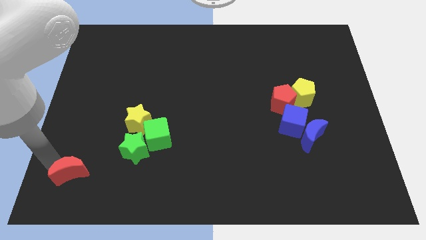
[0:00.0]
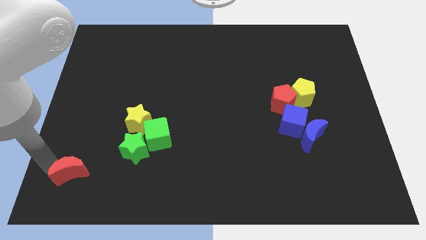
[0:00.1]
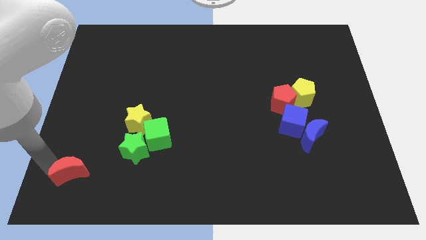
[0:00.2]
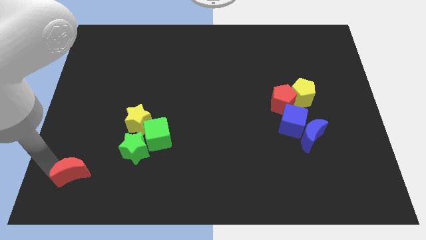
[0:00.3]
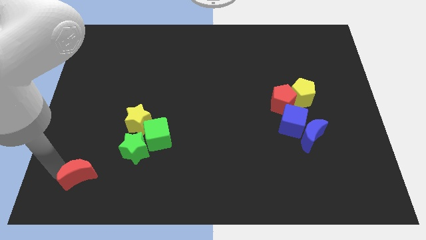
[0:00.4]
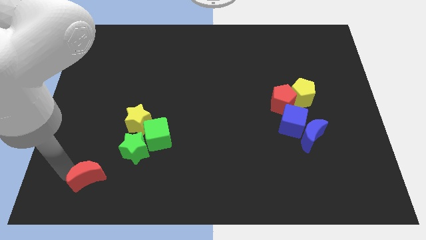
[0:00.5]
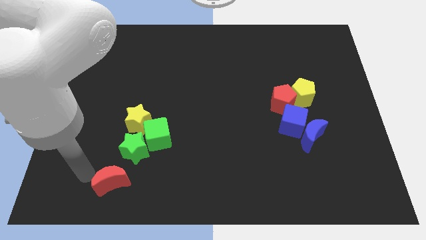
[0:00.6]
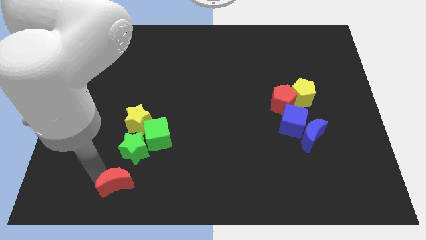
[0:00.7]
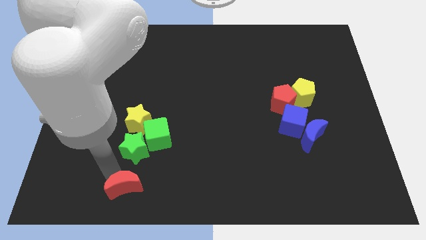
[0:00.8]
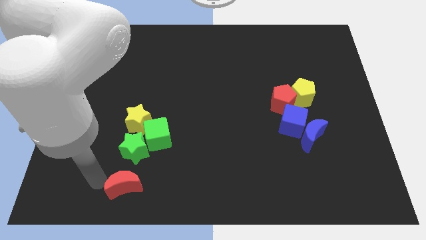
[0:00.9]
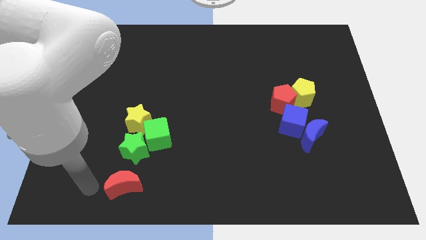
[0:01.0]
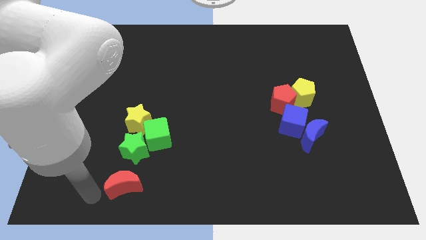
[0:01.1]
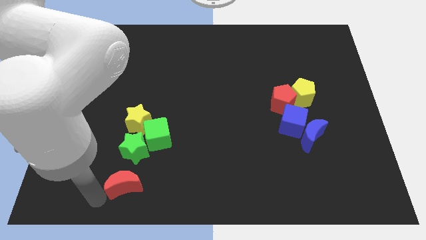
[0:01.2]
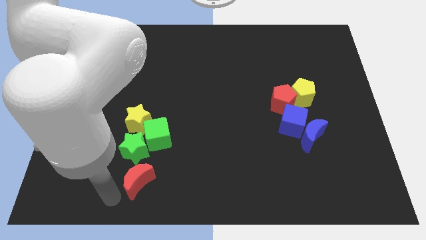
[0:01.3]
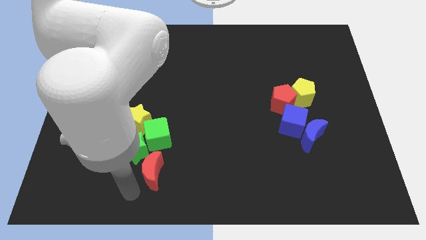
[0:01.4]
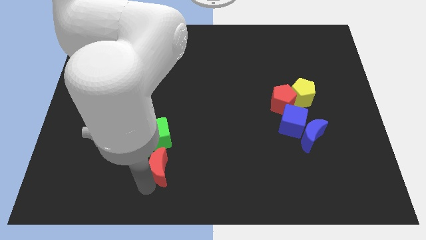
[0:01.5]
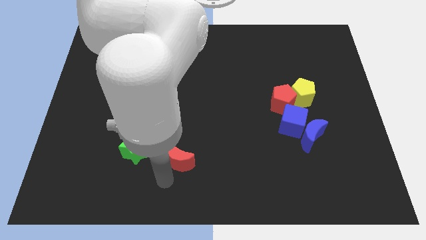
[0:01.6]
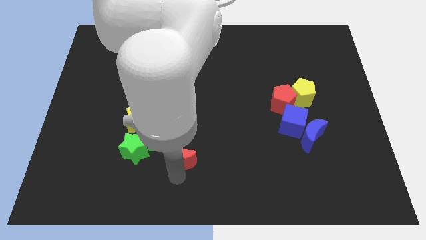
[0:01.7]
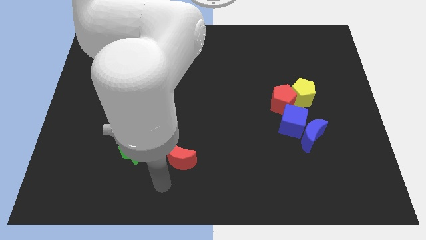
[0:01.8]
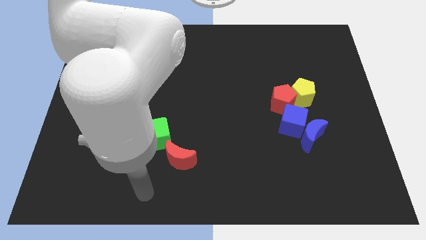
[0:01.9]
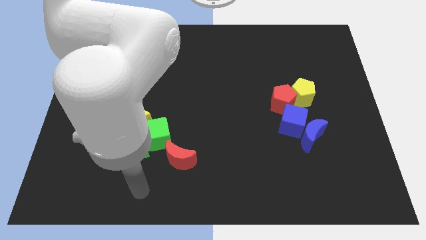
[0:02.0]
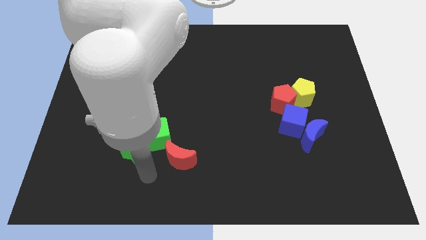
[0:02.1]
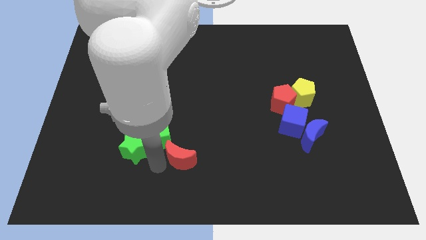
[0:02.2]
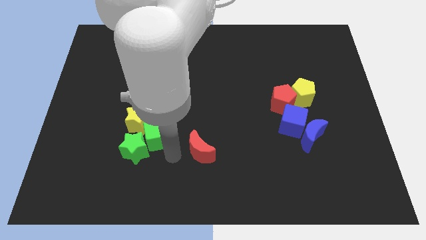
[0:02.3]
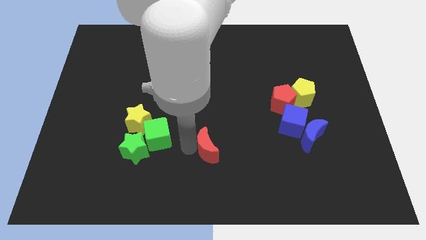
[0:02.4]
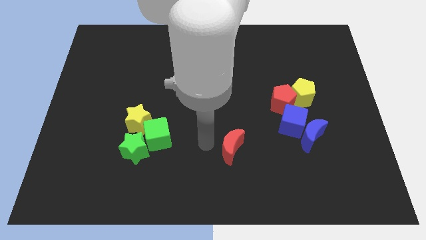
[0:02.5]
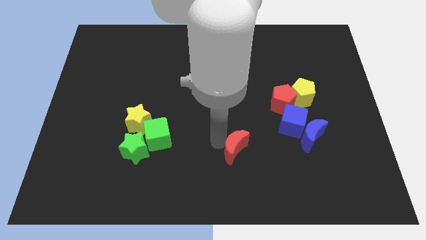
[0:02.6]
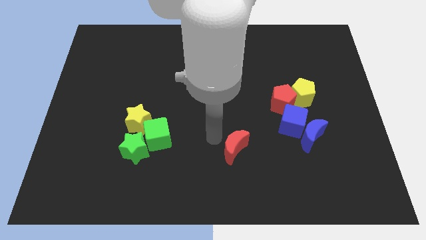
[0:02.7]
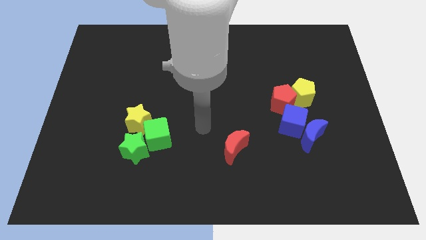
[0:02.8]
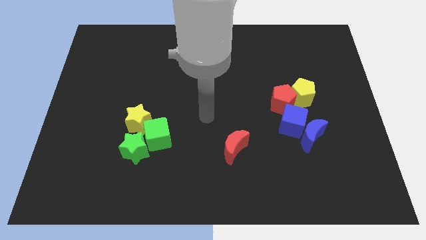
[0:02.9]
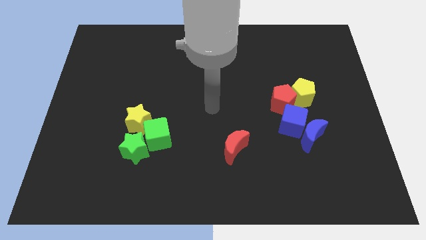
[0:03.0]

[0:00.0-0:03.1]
push the red moon to the right of green star

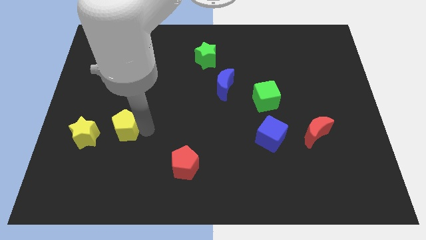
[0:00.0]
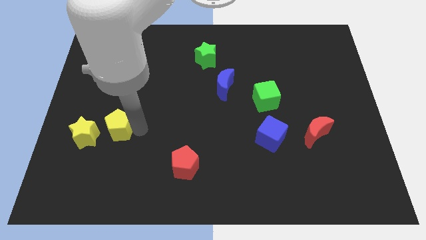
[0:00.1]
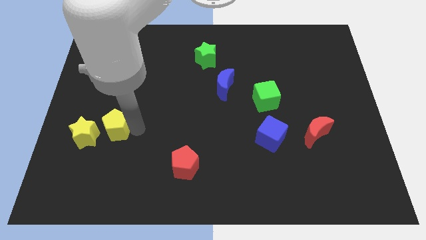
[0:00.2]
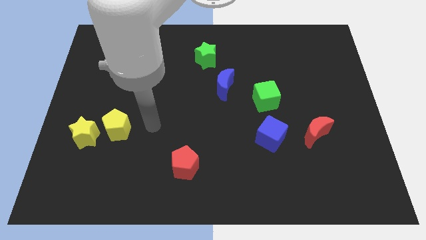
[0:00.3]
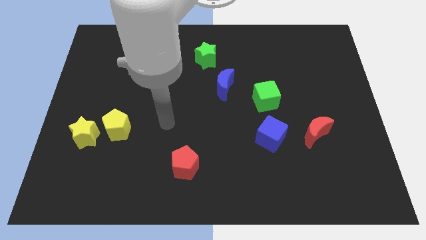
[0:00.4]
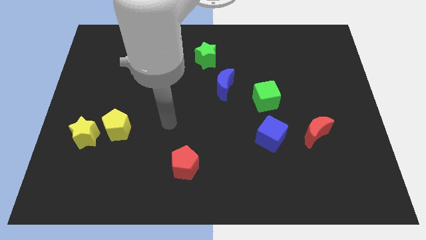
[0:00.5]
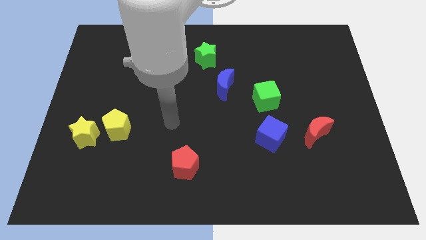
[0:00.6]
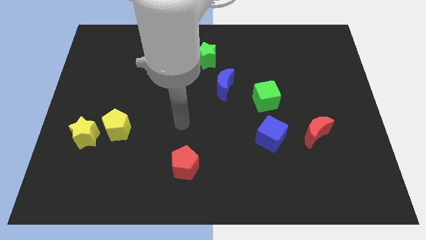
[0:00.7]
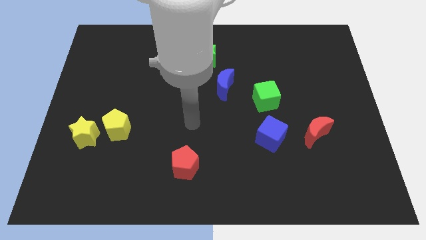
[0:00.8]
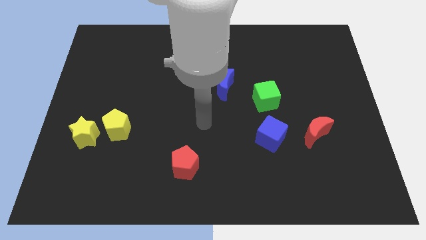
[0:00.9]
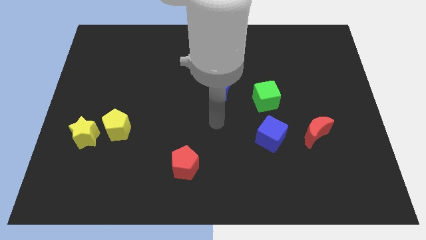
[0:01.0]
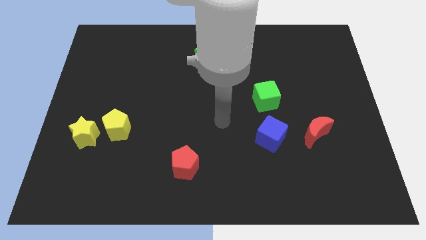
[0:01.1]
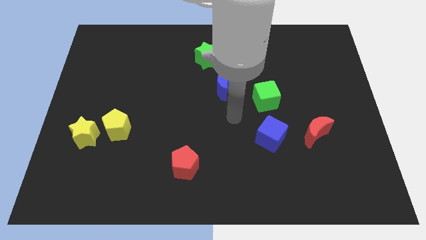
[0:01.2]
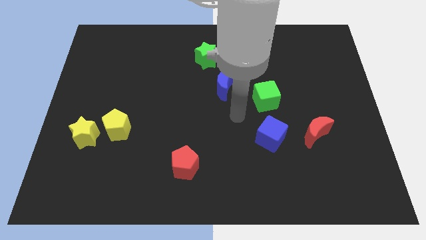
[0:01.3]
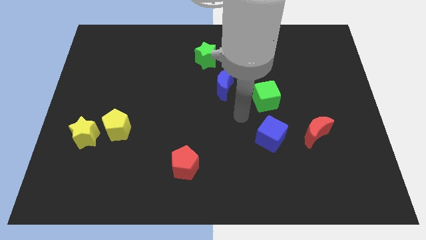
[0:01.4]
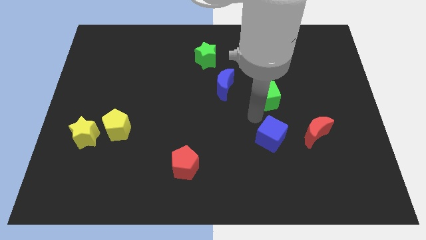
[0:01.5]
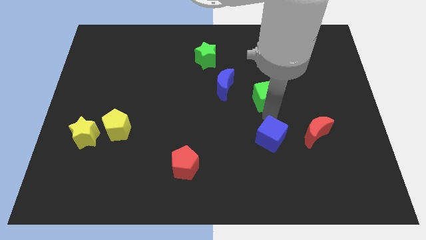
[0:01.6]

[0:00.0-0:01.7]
point your arm at the top of the blue cube

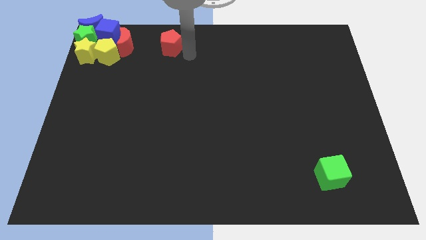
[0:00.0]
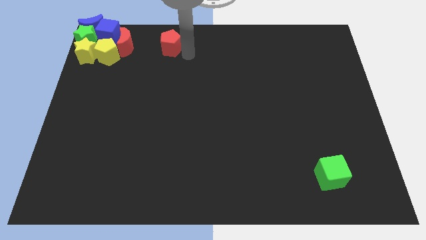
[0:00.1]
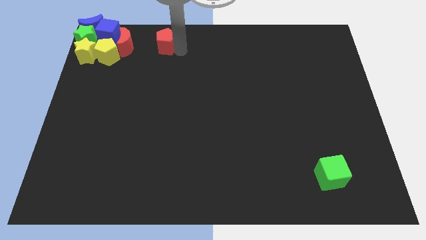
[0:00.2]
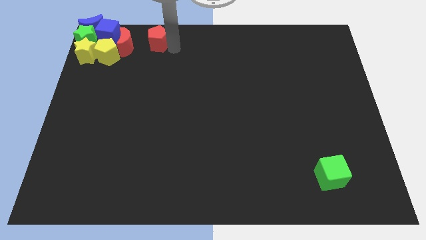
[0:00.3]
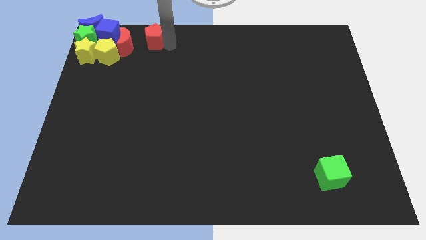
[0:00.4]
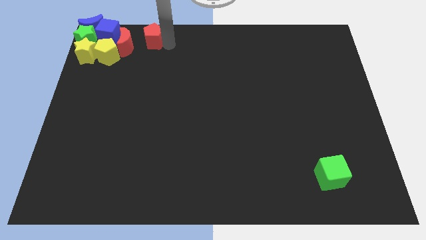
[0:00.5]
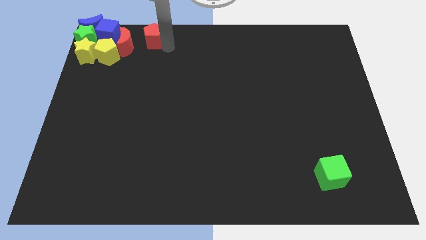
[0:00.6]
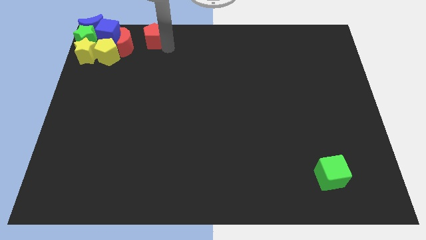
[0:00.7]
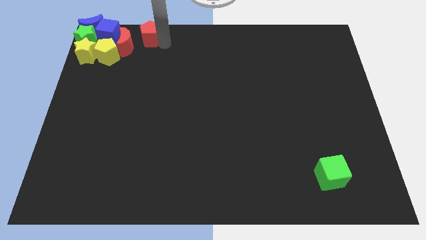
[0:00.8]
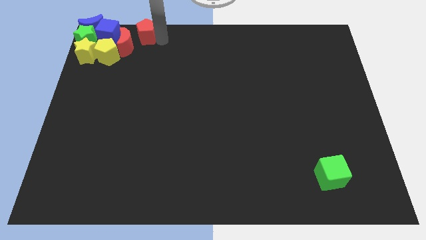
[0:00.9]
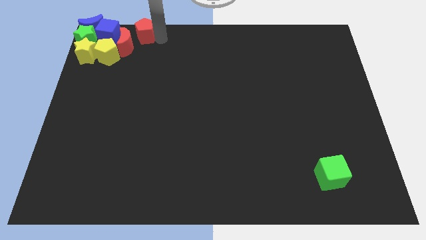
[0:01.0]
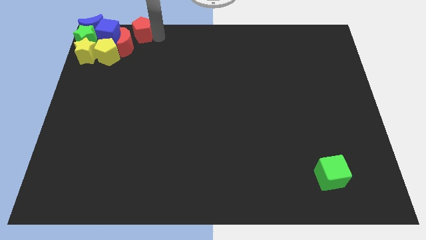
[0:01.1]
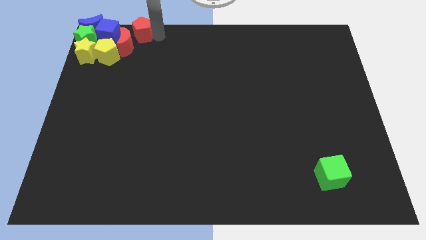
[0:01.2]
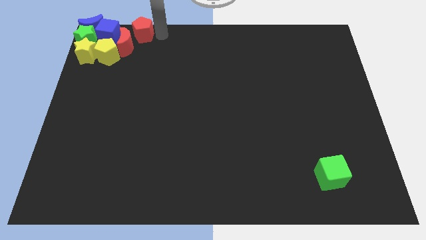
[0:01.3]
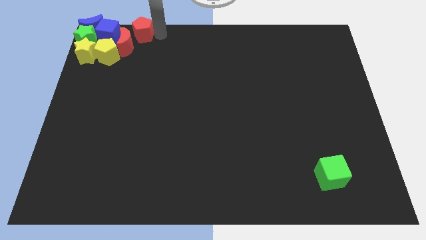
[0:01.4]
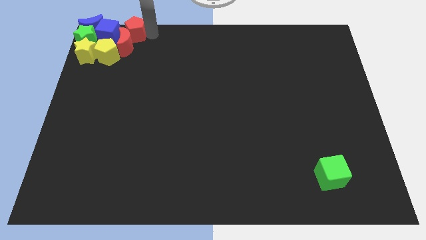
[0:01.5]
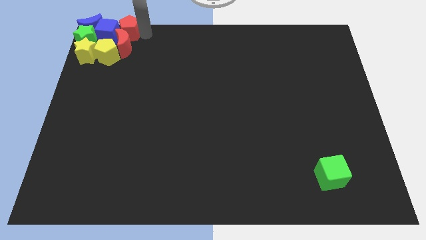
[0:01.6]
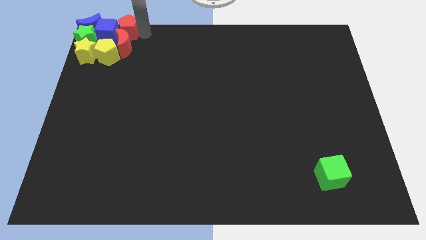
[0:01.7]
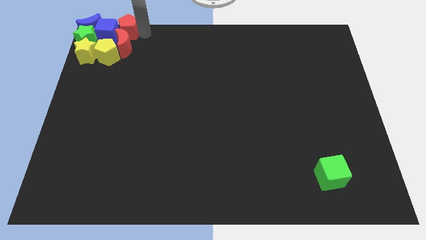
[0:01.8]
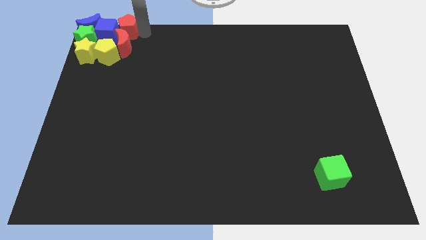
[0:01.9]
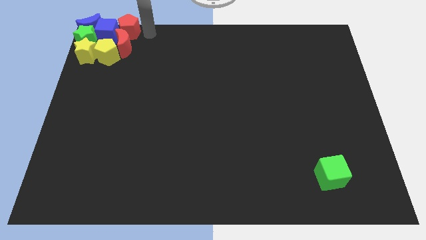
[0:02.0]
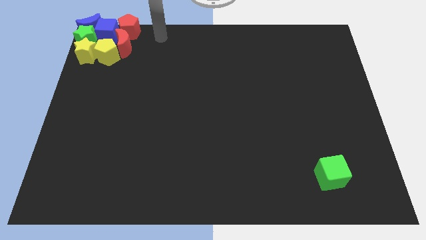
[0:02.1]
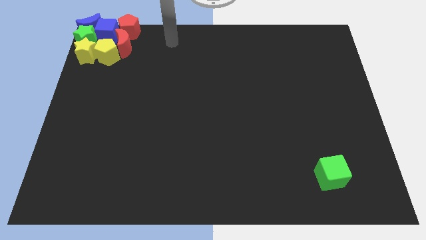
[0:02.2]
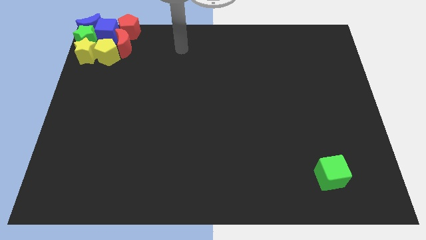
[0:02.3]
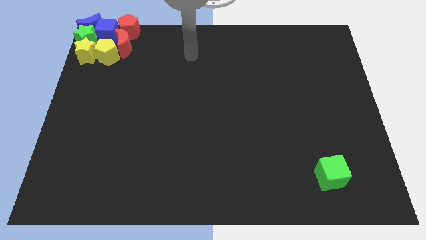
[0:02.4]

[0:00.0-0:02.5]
push the red pentagon above the red crescent

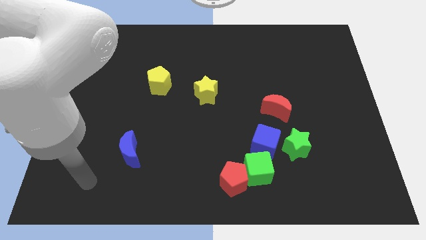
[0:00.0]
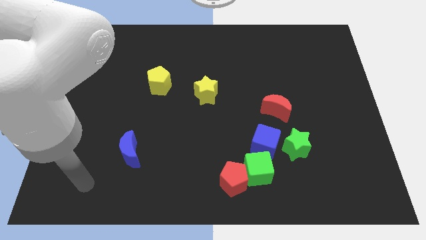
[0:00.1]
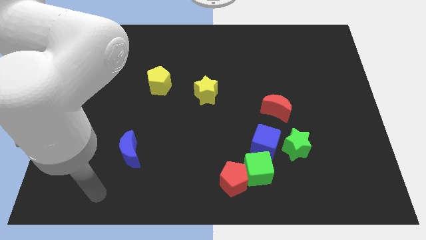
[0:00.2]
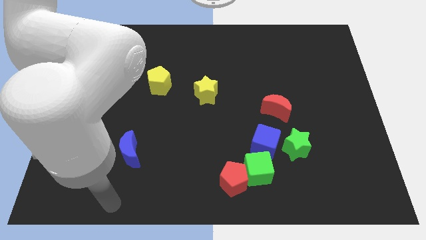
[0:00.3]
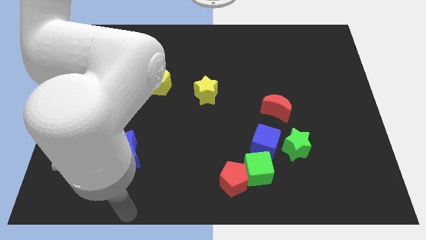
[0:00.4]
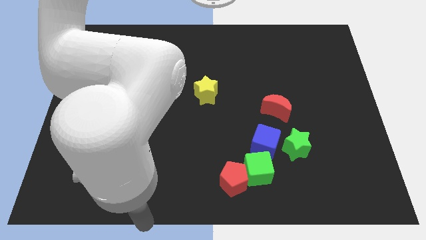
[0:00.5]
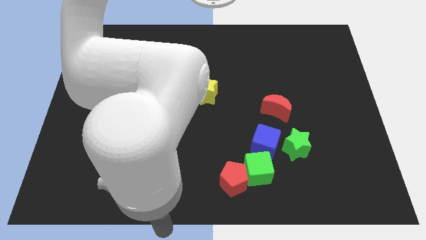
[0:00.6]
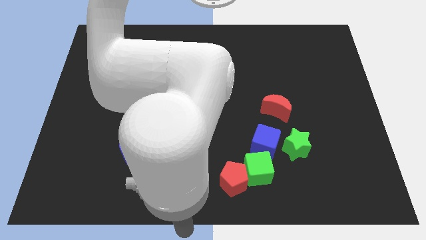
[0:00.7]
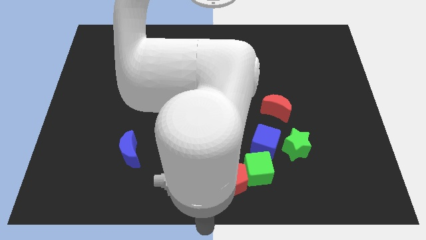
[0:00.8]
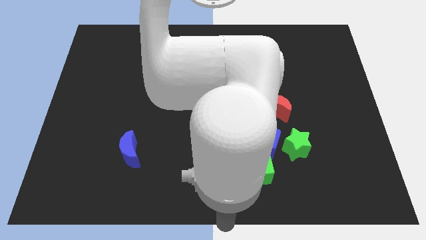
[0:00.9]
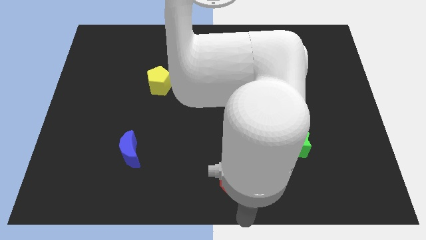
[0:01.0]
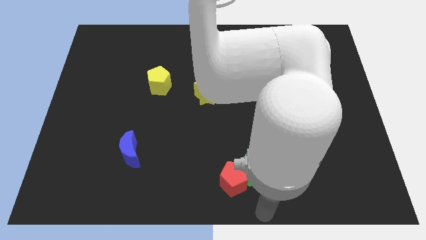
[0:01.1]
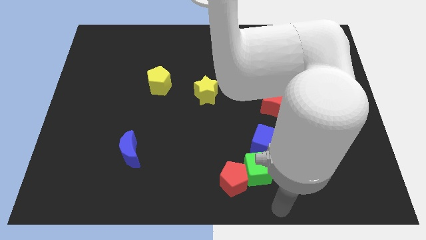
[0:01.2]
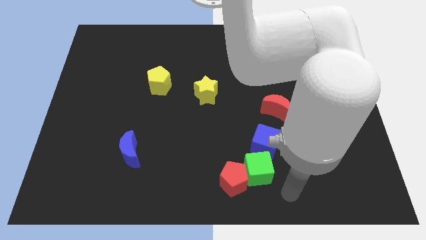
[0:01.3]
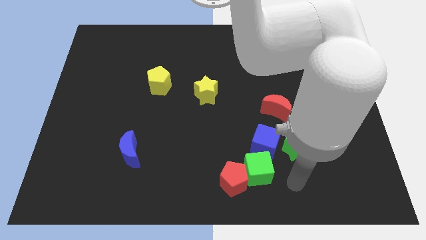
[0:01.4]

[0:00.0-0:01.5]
move your arm in between the green cube and the green star

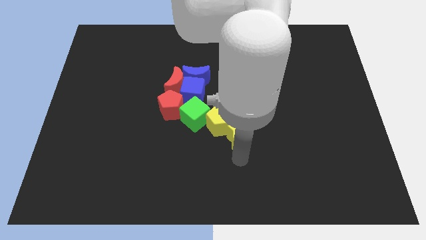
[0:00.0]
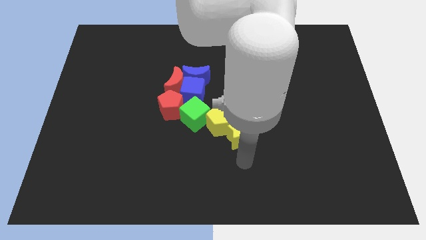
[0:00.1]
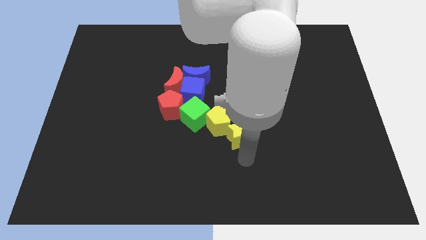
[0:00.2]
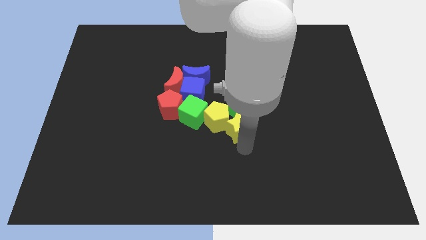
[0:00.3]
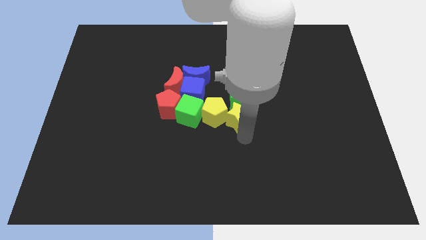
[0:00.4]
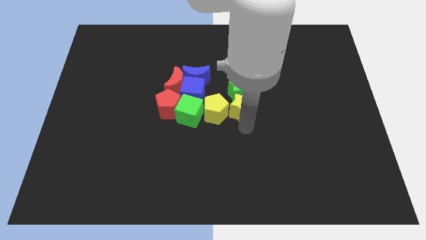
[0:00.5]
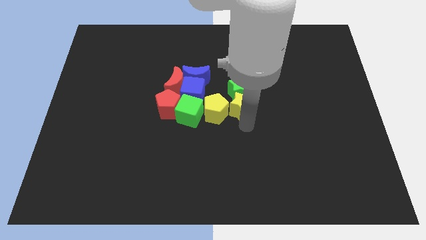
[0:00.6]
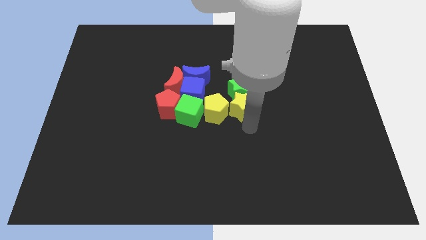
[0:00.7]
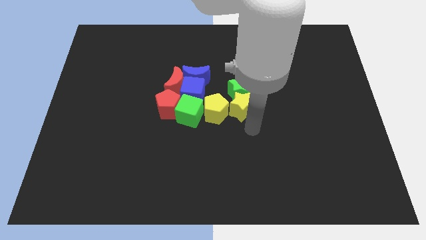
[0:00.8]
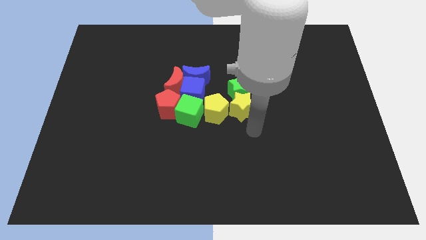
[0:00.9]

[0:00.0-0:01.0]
push the yellow star below the green star
